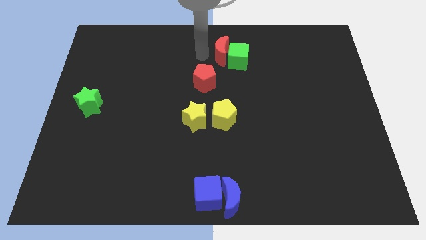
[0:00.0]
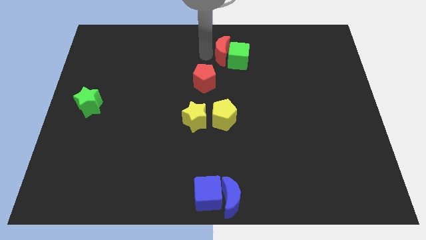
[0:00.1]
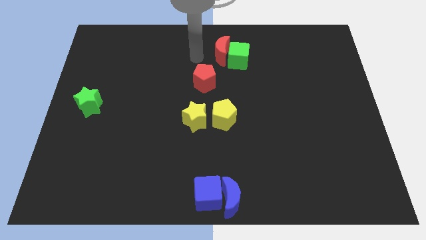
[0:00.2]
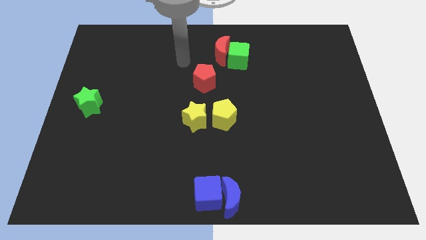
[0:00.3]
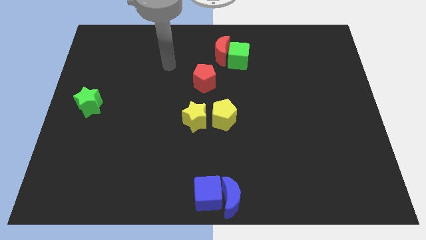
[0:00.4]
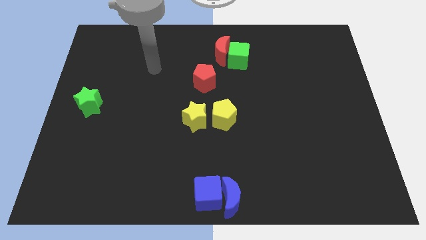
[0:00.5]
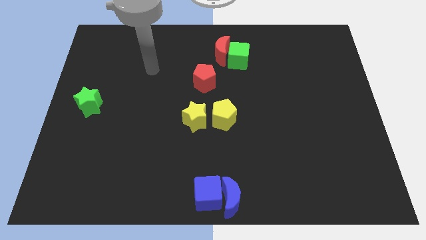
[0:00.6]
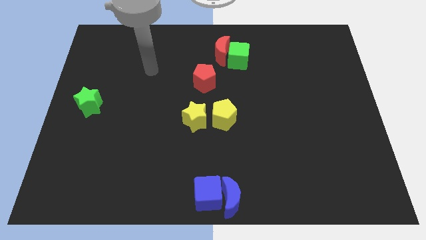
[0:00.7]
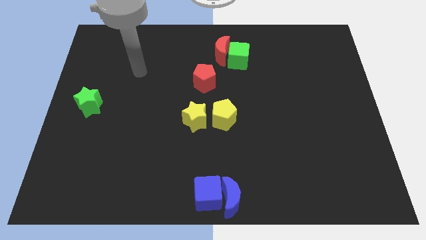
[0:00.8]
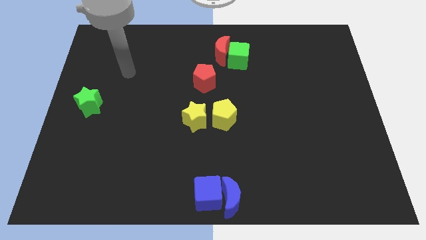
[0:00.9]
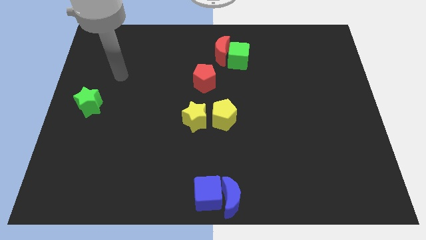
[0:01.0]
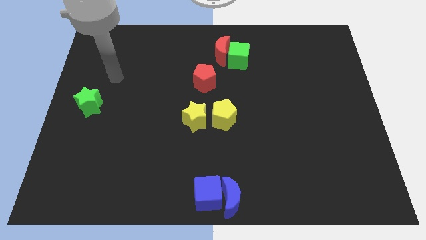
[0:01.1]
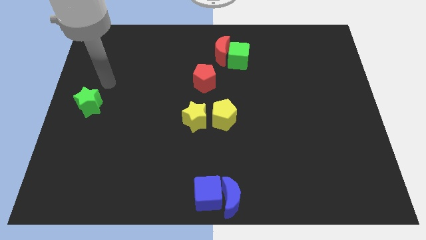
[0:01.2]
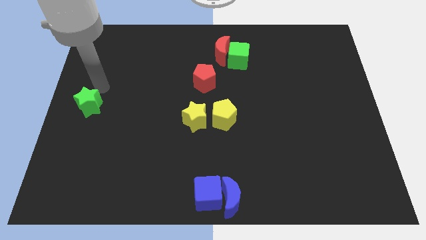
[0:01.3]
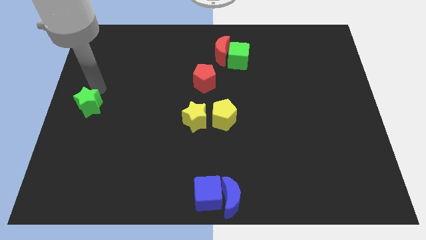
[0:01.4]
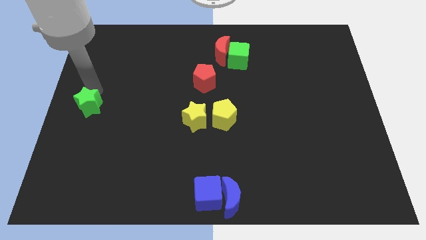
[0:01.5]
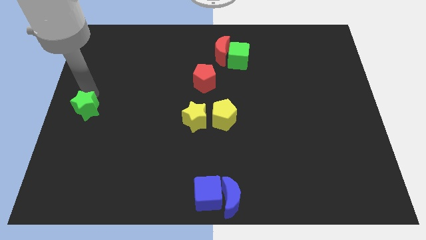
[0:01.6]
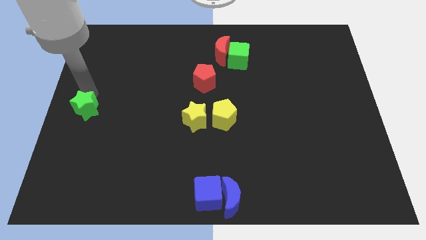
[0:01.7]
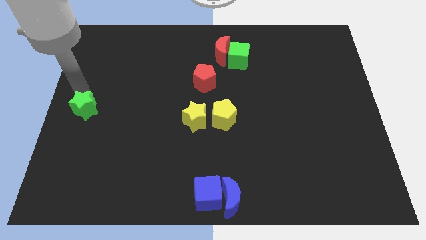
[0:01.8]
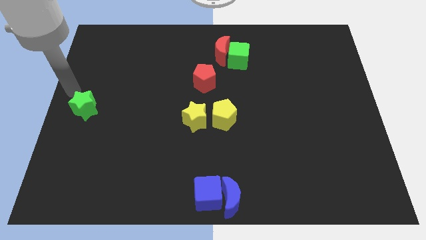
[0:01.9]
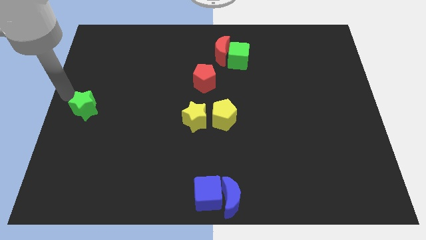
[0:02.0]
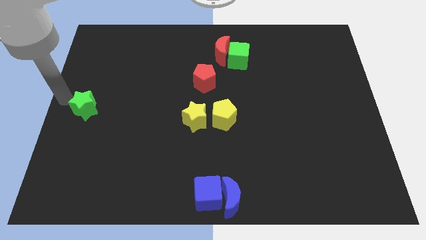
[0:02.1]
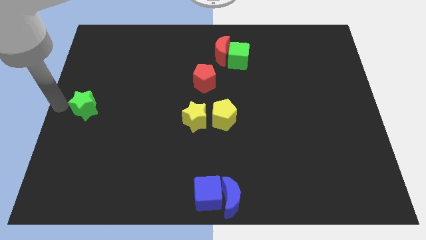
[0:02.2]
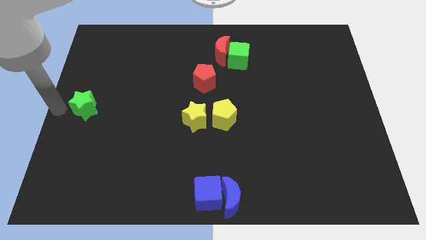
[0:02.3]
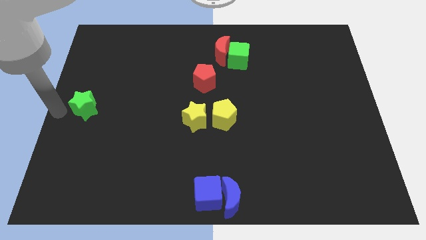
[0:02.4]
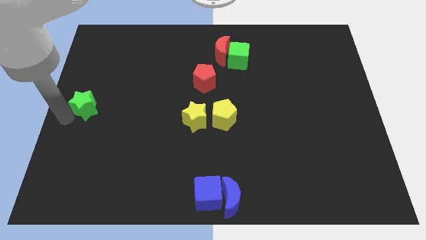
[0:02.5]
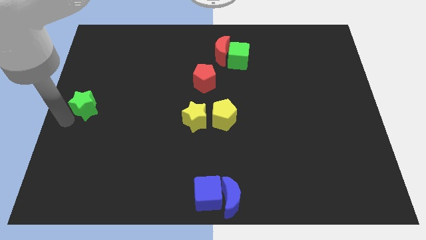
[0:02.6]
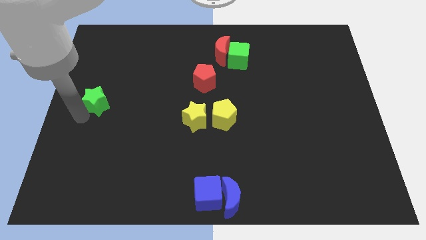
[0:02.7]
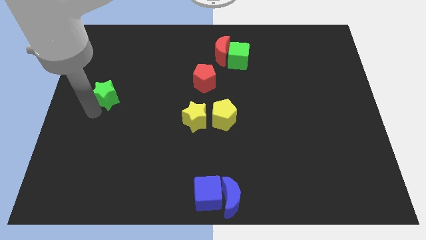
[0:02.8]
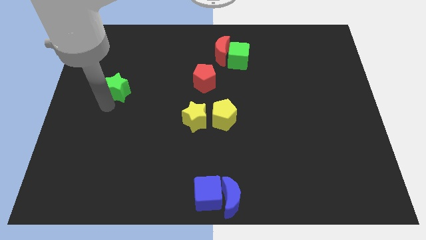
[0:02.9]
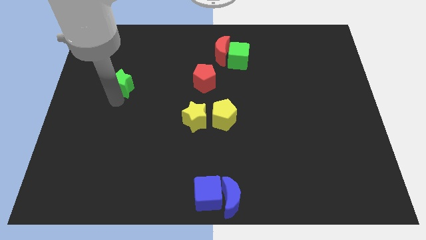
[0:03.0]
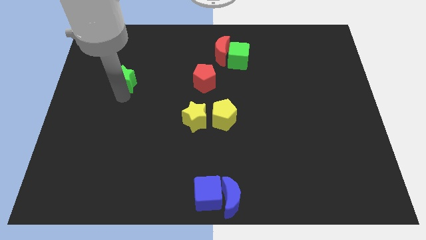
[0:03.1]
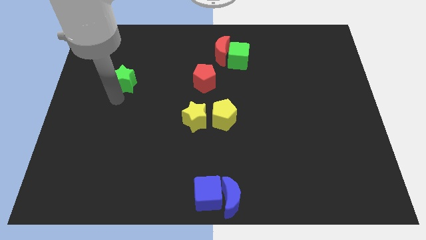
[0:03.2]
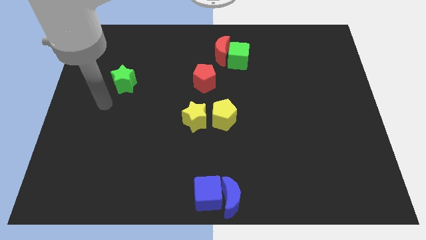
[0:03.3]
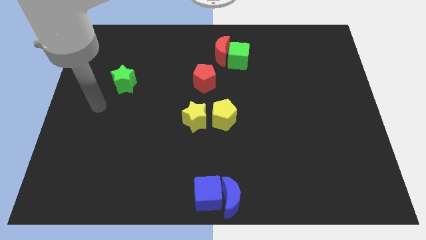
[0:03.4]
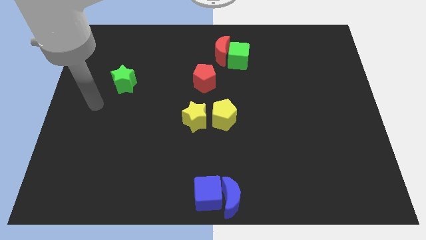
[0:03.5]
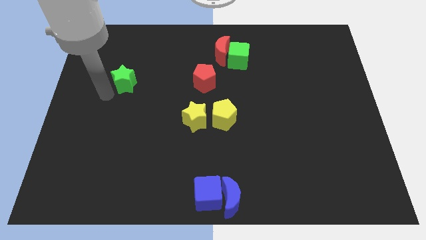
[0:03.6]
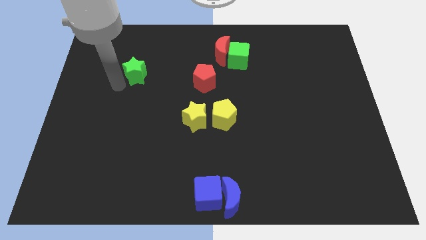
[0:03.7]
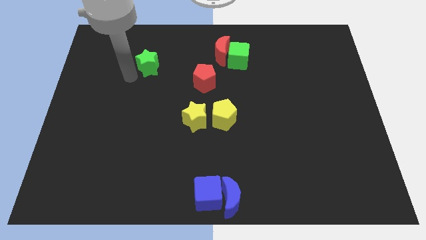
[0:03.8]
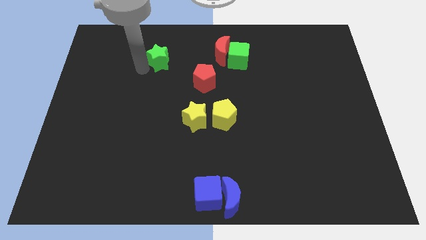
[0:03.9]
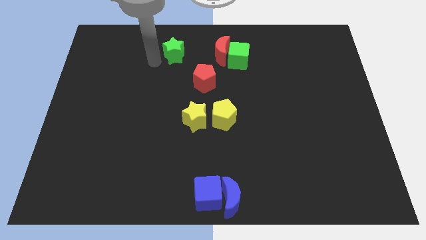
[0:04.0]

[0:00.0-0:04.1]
place green star to the left of red moon

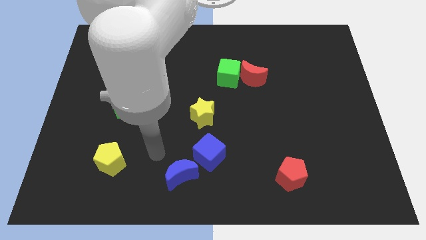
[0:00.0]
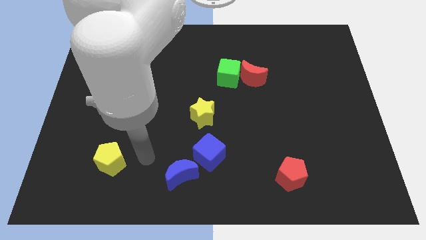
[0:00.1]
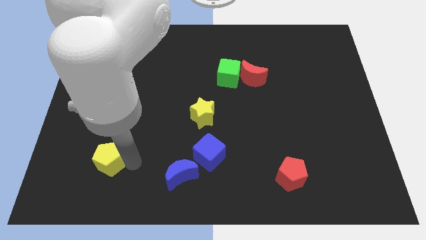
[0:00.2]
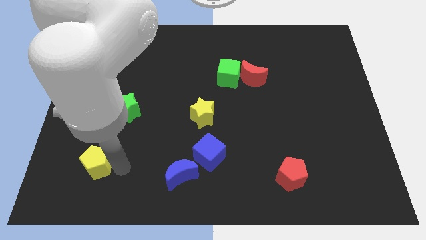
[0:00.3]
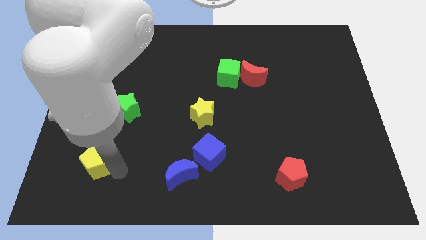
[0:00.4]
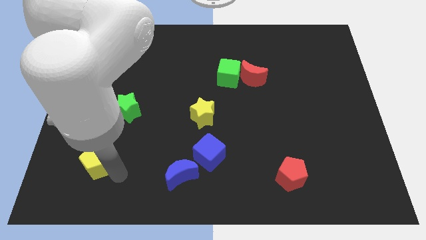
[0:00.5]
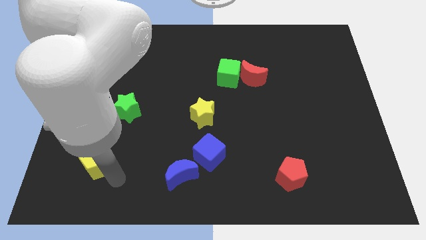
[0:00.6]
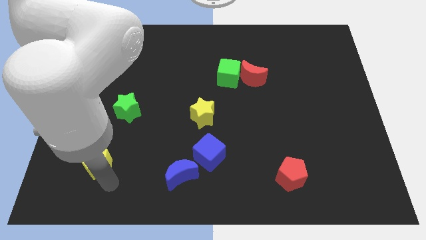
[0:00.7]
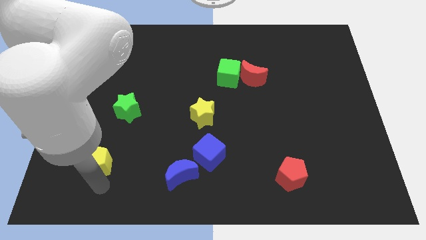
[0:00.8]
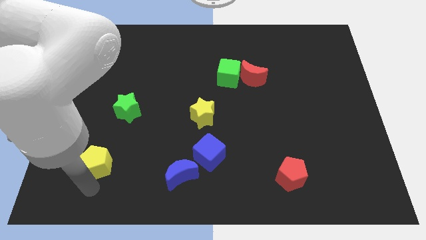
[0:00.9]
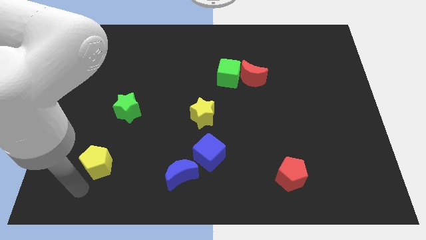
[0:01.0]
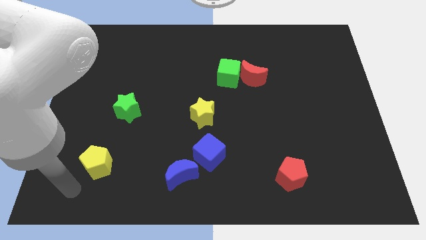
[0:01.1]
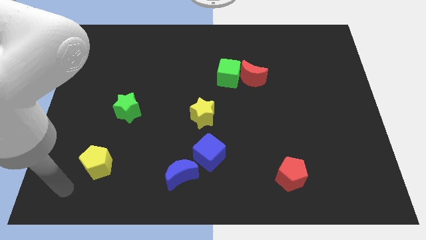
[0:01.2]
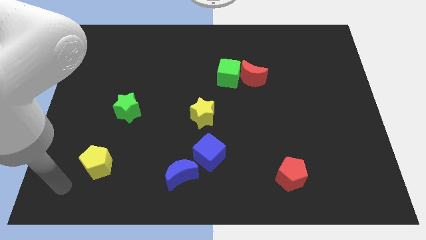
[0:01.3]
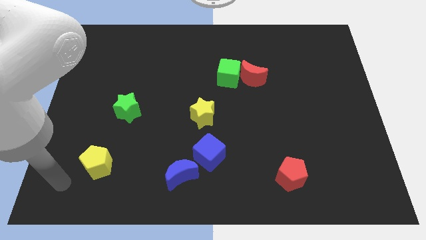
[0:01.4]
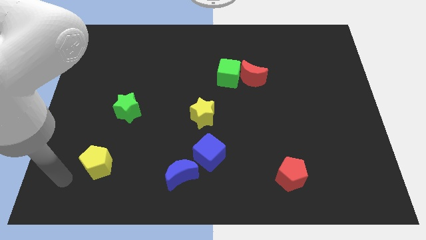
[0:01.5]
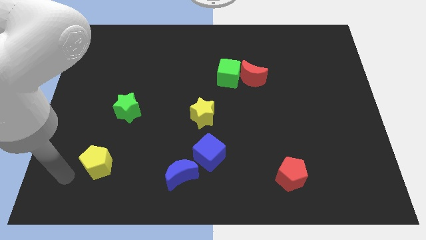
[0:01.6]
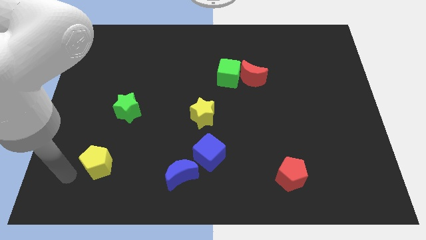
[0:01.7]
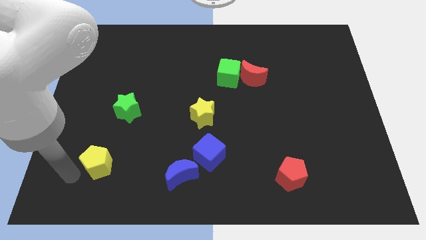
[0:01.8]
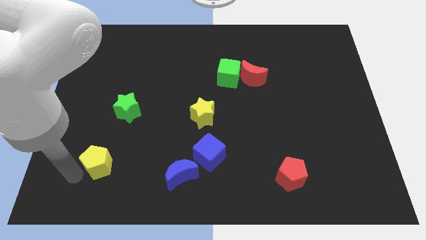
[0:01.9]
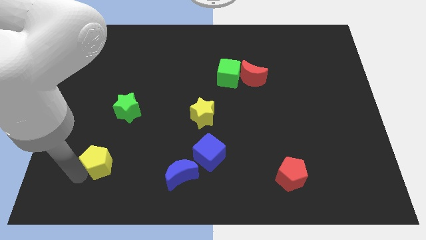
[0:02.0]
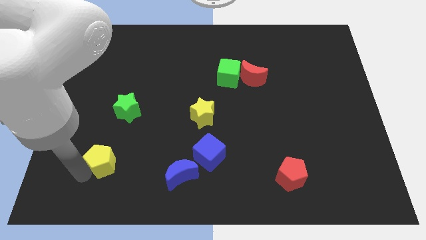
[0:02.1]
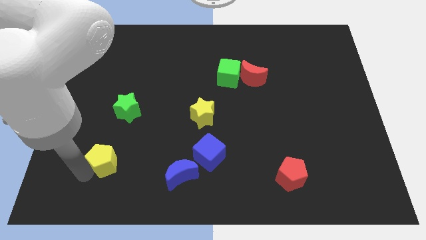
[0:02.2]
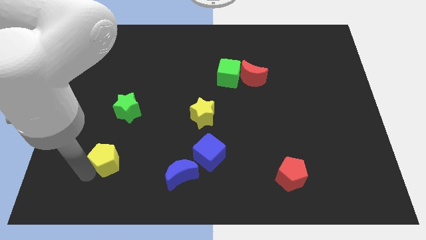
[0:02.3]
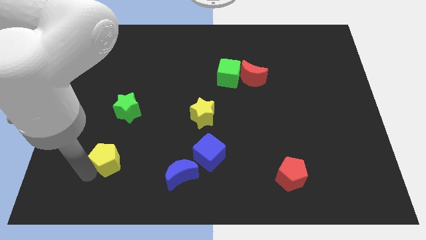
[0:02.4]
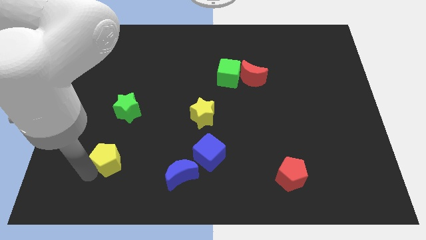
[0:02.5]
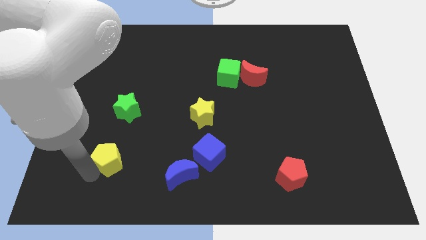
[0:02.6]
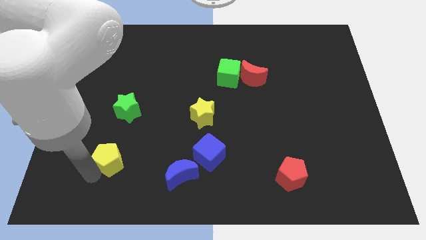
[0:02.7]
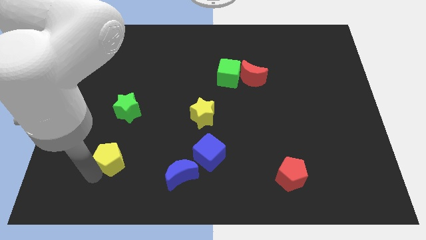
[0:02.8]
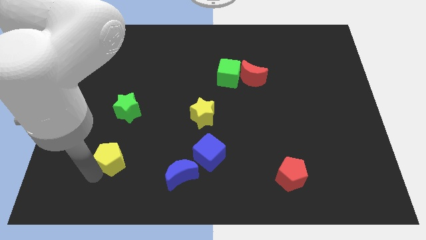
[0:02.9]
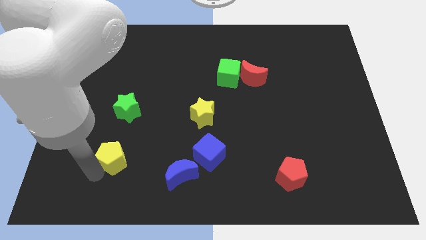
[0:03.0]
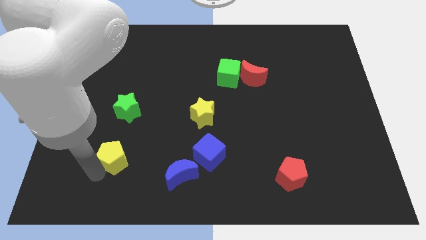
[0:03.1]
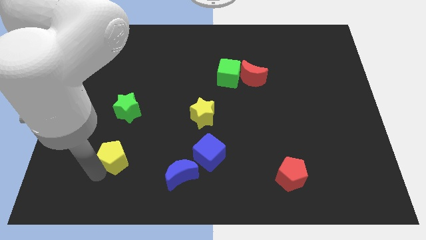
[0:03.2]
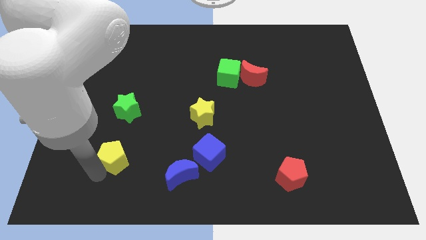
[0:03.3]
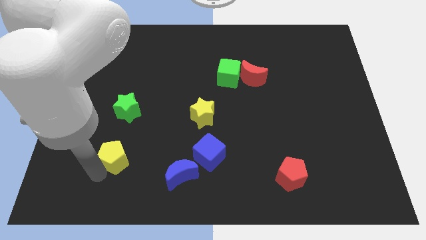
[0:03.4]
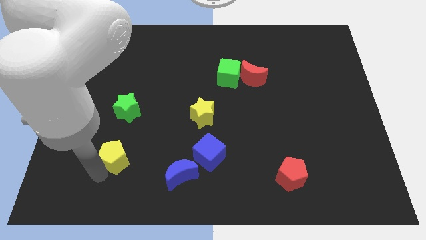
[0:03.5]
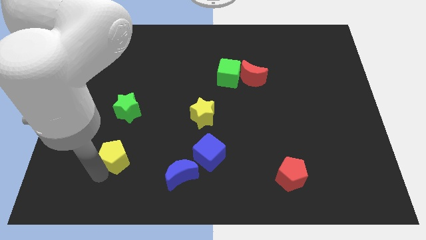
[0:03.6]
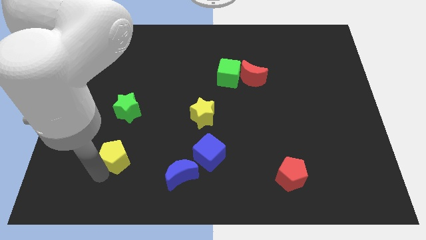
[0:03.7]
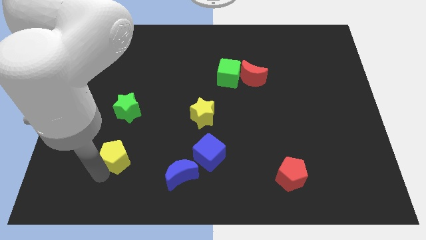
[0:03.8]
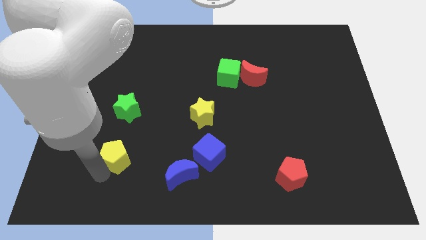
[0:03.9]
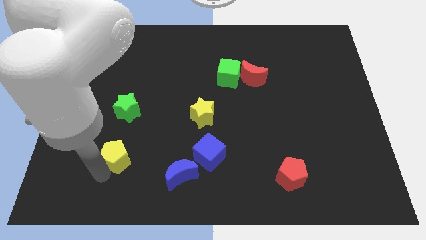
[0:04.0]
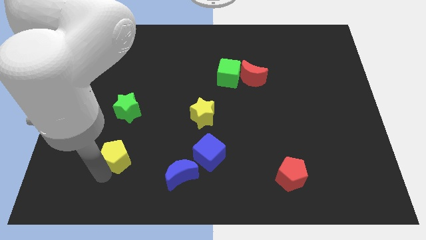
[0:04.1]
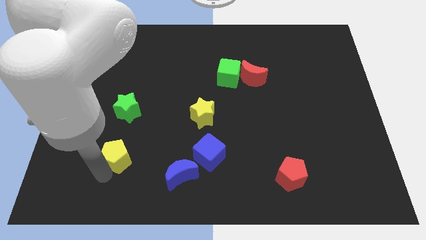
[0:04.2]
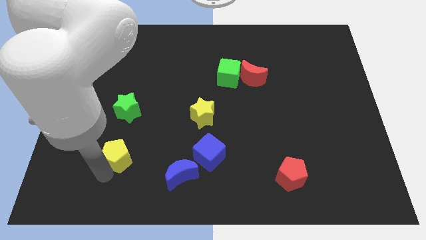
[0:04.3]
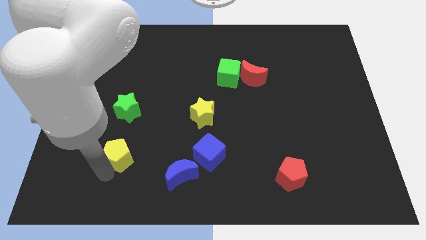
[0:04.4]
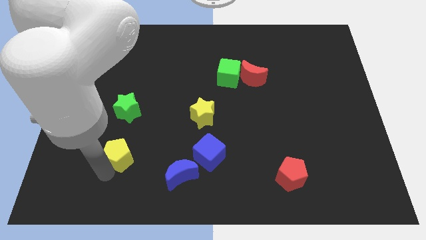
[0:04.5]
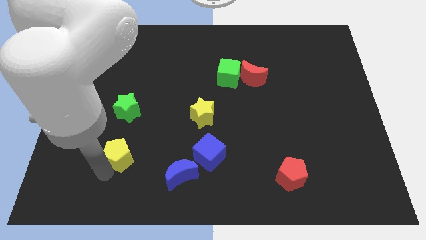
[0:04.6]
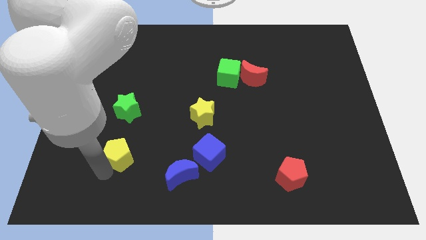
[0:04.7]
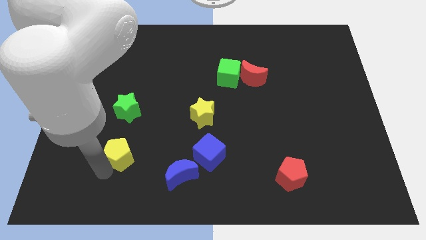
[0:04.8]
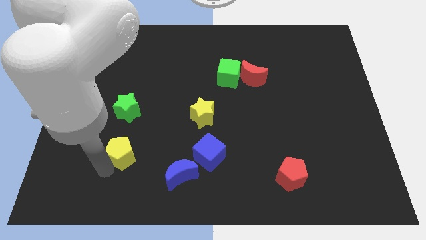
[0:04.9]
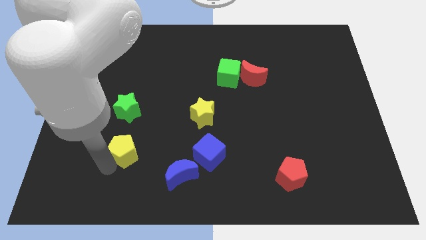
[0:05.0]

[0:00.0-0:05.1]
place yellow pentagon below the green star
